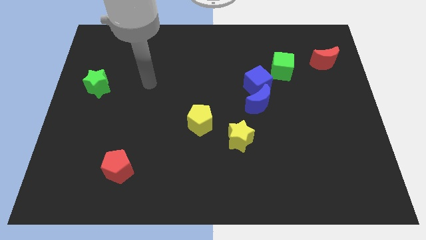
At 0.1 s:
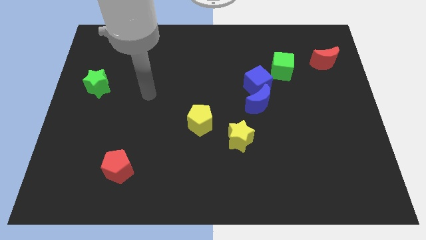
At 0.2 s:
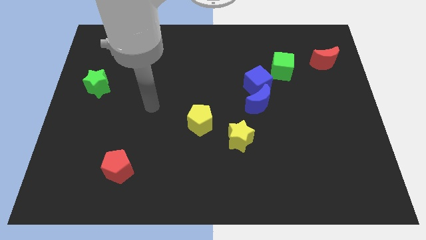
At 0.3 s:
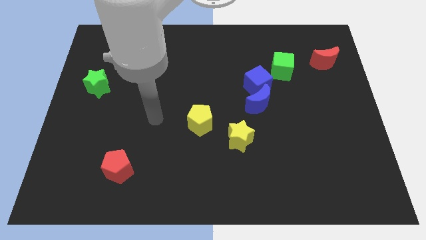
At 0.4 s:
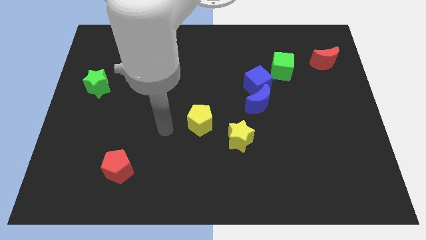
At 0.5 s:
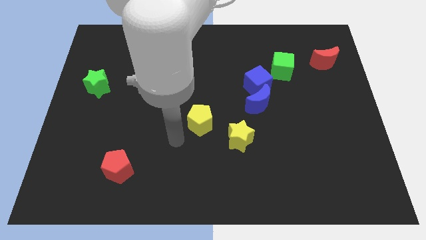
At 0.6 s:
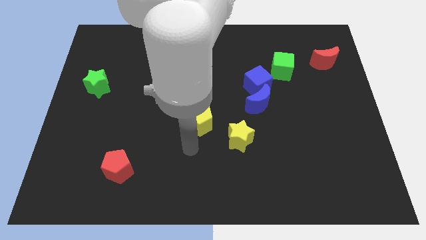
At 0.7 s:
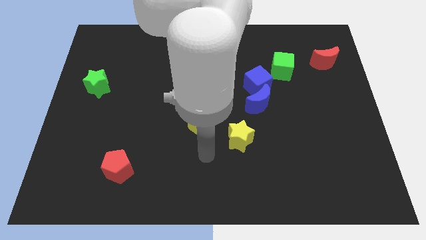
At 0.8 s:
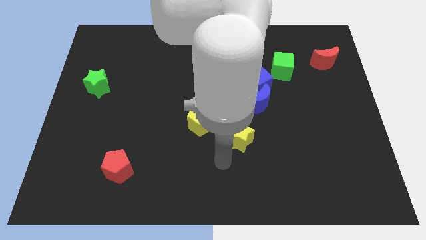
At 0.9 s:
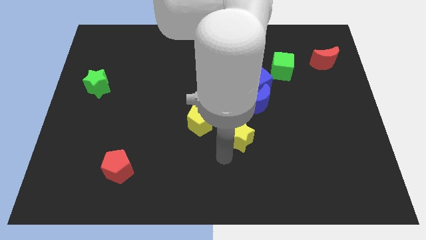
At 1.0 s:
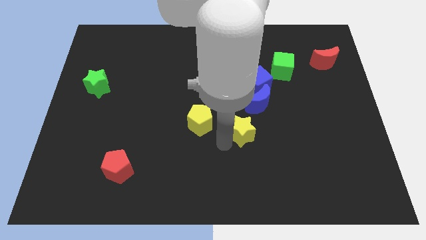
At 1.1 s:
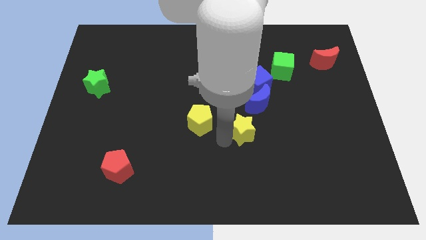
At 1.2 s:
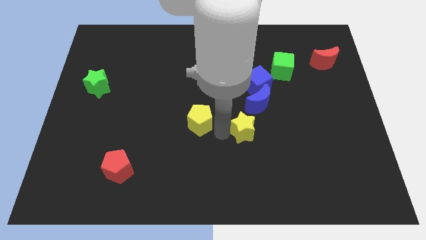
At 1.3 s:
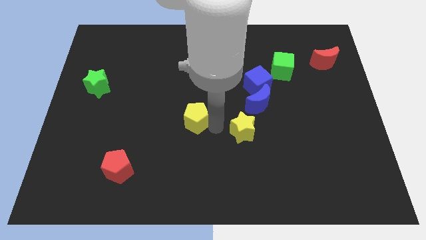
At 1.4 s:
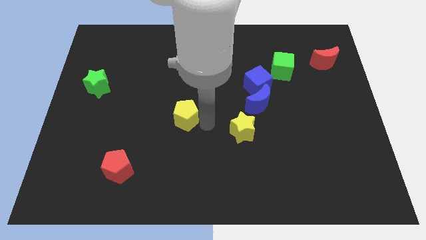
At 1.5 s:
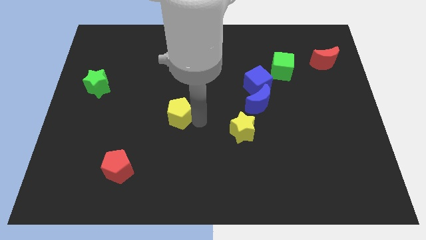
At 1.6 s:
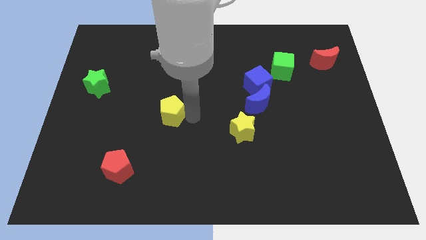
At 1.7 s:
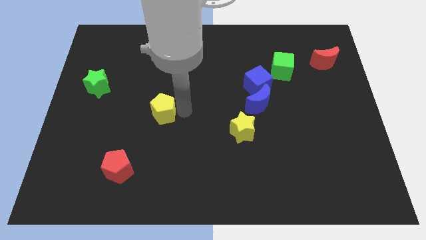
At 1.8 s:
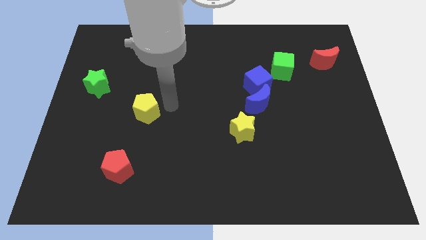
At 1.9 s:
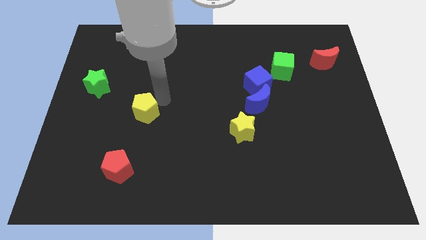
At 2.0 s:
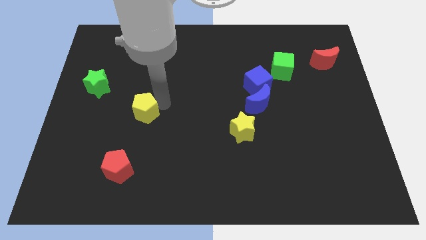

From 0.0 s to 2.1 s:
separate yellow pentagon from yellow star

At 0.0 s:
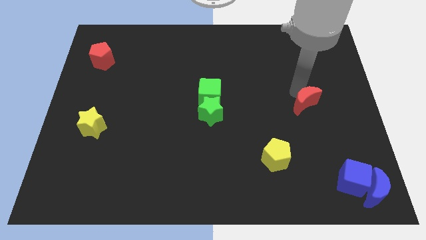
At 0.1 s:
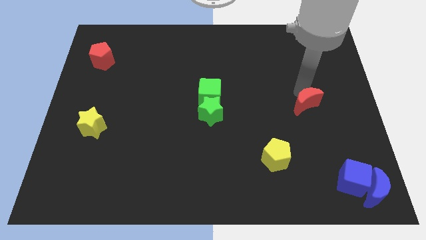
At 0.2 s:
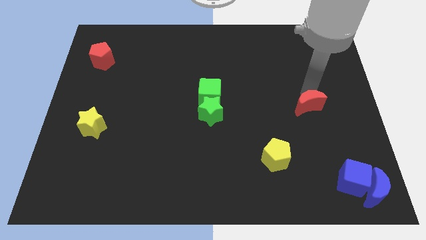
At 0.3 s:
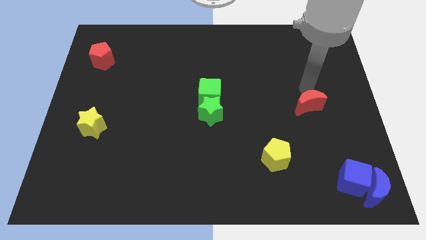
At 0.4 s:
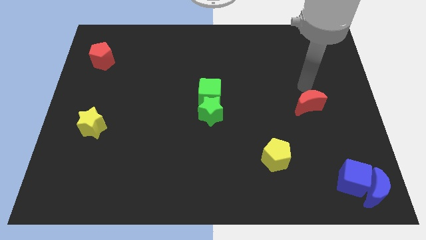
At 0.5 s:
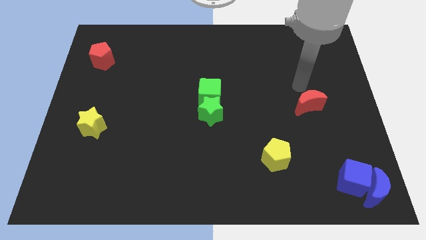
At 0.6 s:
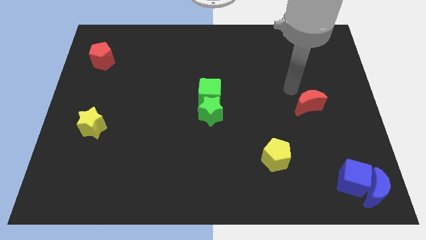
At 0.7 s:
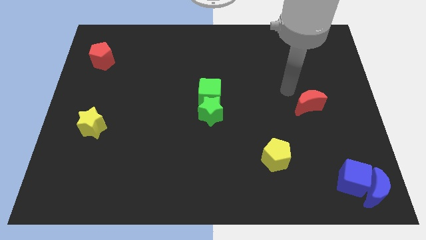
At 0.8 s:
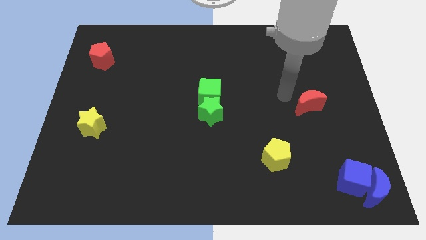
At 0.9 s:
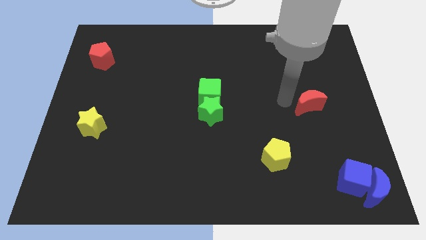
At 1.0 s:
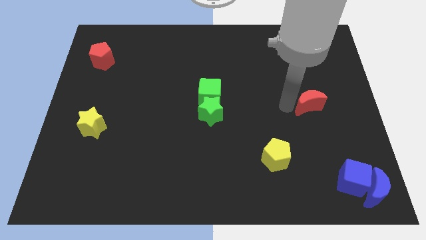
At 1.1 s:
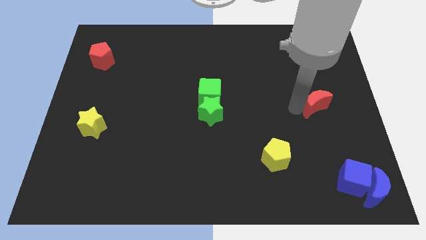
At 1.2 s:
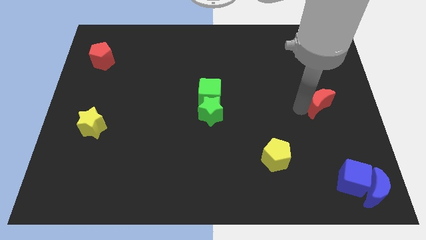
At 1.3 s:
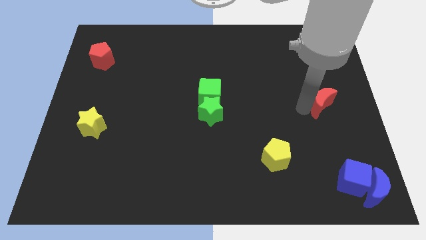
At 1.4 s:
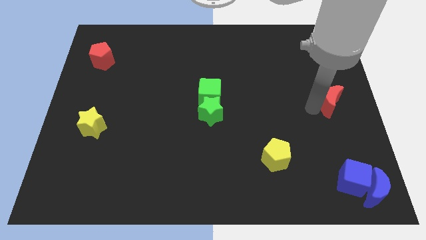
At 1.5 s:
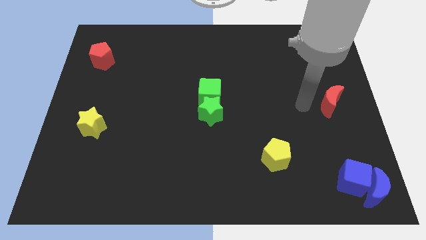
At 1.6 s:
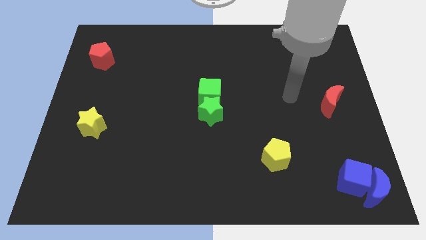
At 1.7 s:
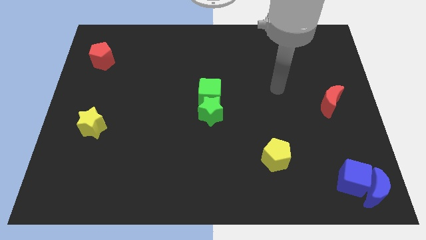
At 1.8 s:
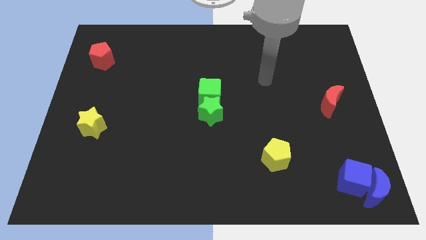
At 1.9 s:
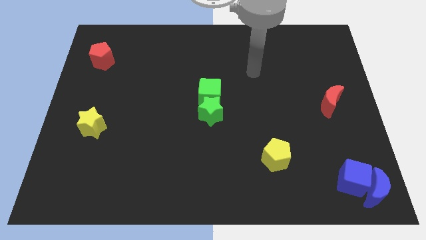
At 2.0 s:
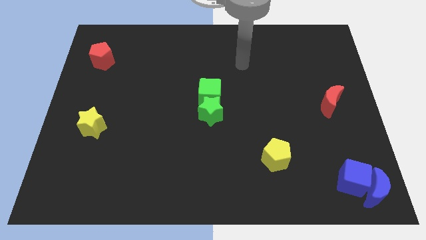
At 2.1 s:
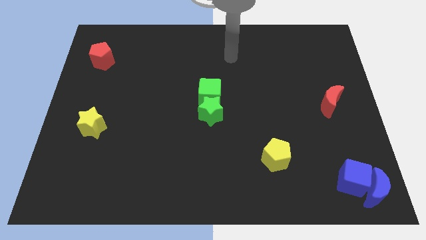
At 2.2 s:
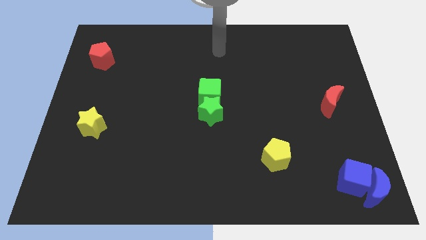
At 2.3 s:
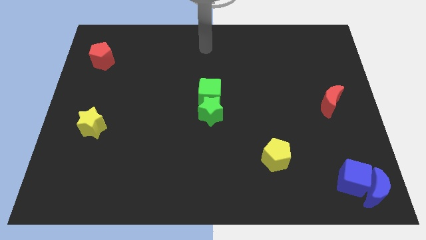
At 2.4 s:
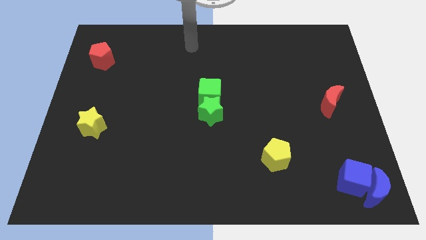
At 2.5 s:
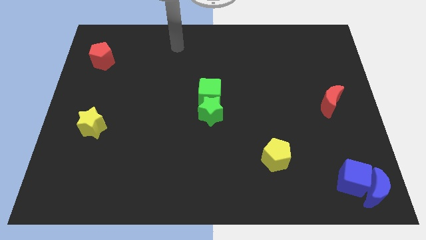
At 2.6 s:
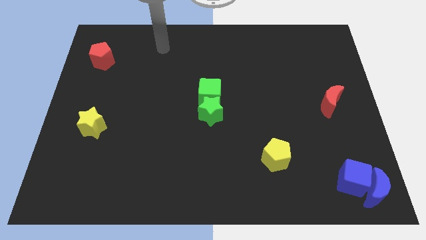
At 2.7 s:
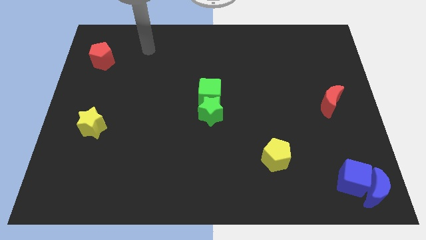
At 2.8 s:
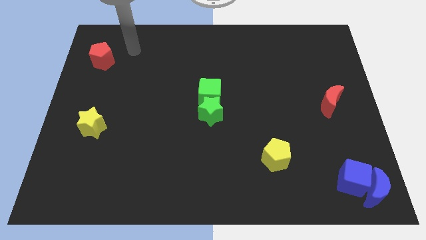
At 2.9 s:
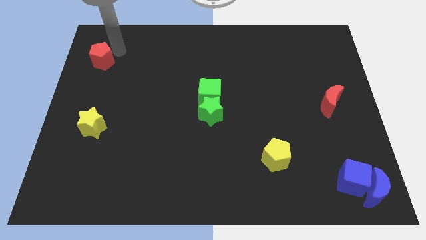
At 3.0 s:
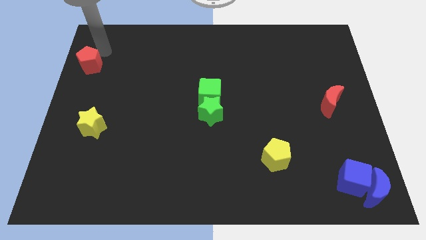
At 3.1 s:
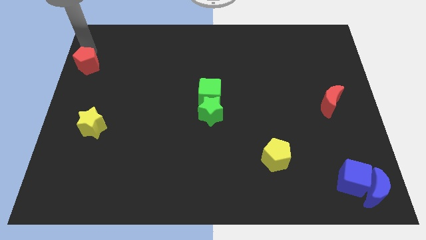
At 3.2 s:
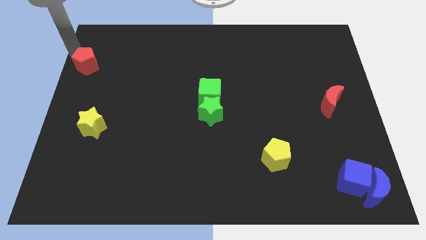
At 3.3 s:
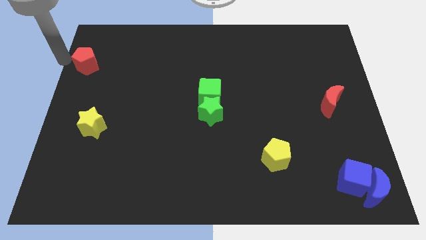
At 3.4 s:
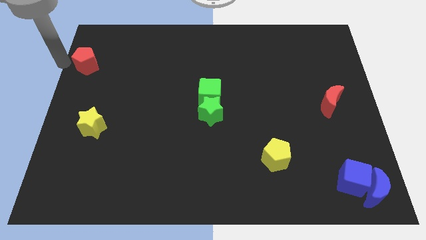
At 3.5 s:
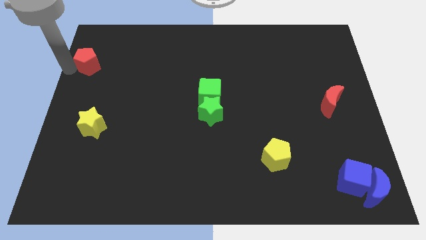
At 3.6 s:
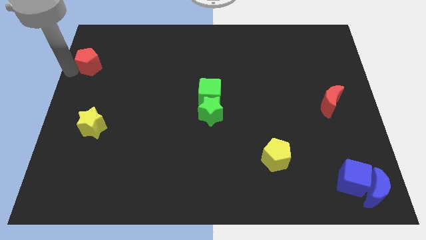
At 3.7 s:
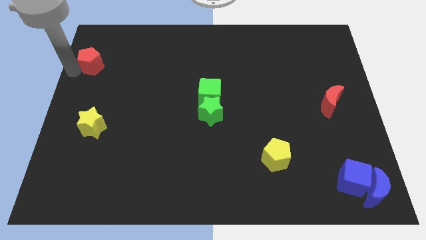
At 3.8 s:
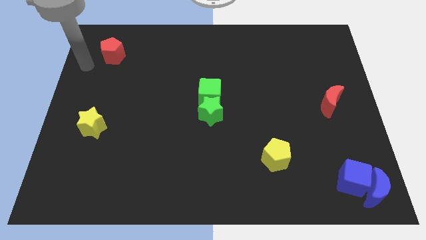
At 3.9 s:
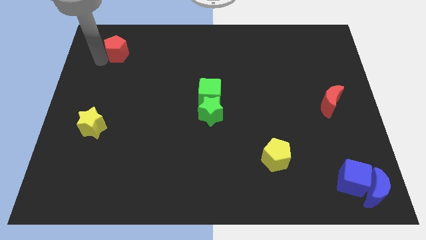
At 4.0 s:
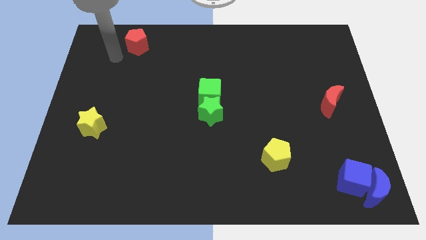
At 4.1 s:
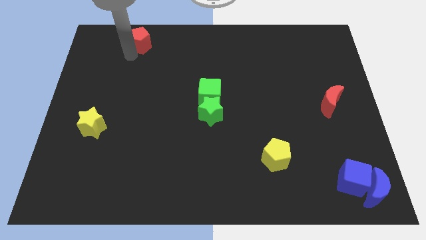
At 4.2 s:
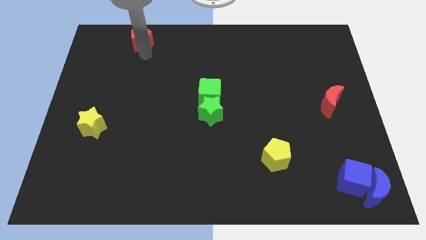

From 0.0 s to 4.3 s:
move the red crescent towards the center right of the board

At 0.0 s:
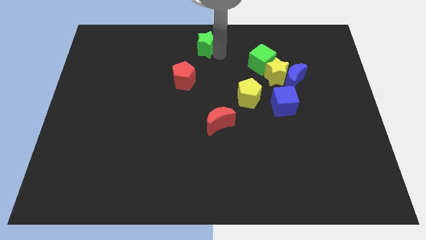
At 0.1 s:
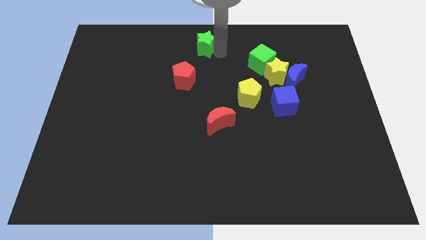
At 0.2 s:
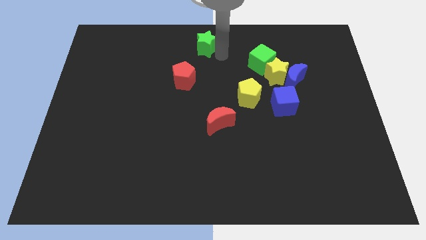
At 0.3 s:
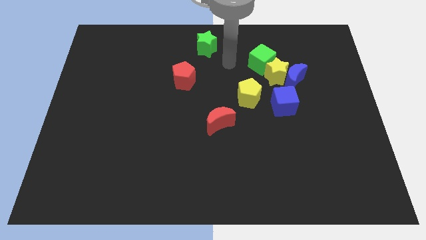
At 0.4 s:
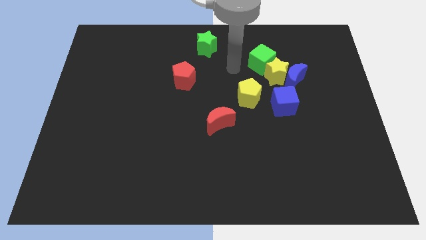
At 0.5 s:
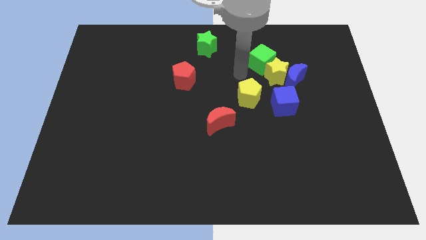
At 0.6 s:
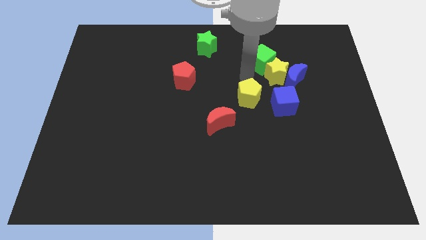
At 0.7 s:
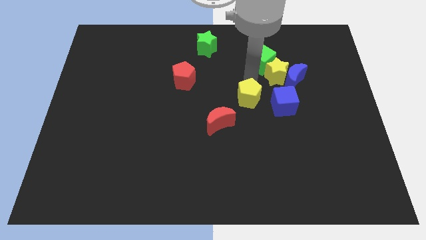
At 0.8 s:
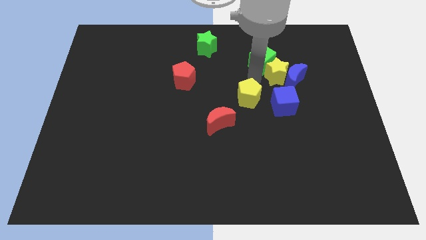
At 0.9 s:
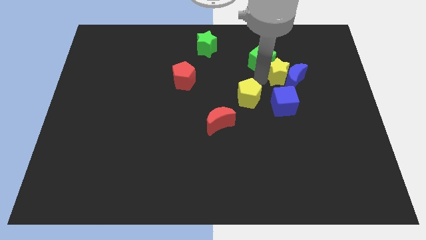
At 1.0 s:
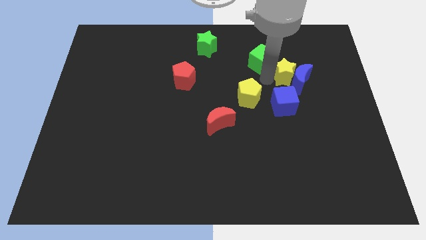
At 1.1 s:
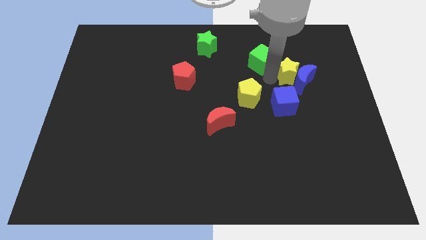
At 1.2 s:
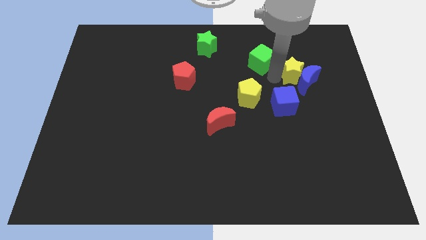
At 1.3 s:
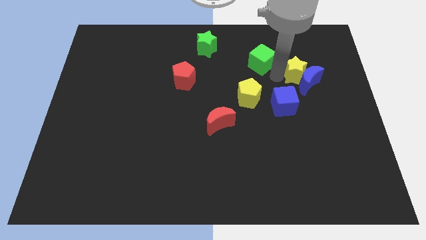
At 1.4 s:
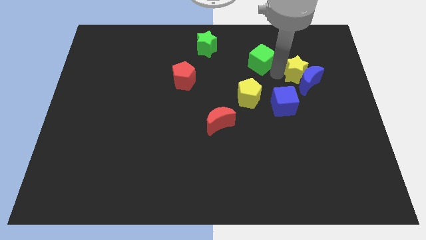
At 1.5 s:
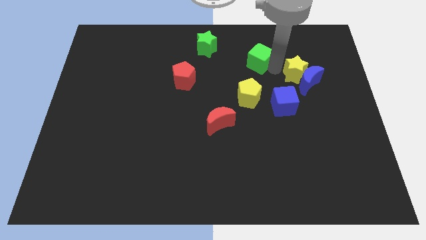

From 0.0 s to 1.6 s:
separate the green cube and yellow star from each other

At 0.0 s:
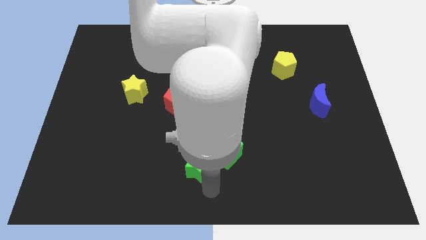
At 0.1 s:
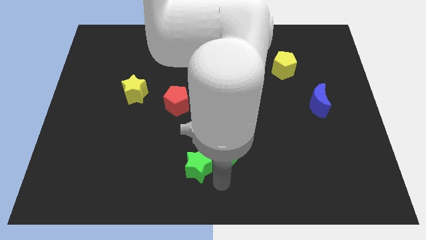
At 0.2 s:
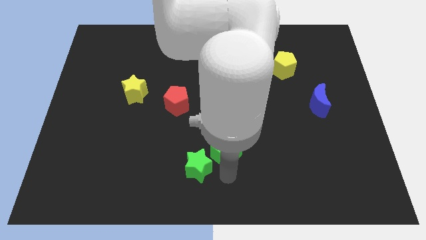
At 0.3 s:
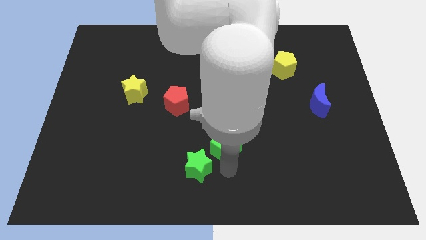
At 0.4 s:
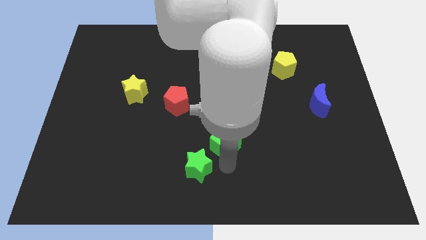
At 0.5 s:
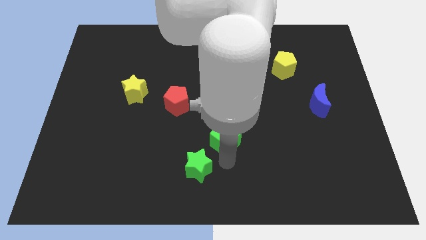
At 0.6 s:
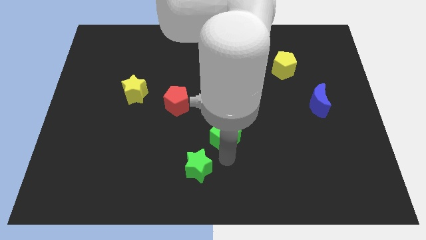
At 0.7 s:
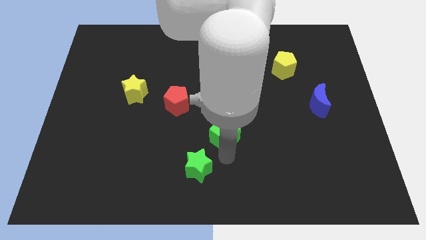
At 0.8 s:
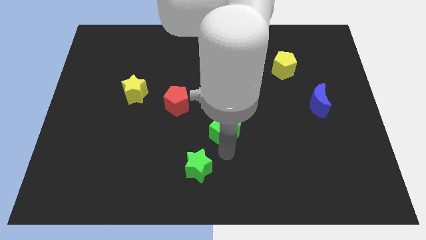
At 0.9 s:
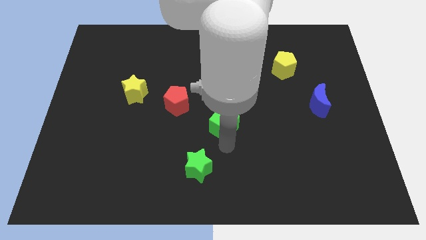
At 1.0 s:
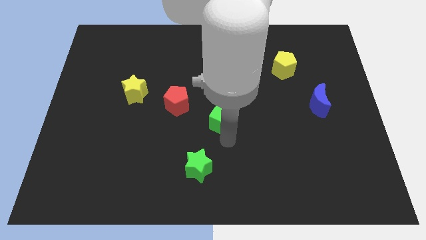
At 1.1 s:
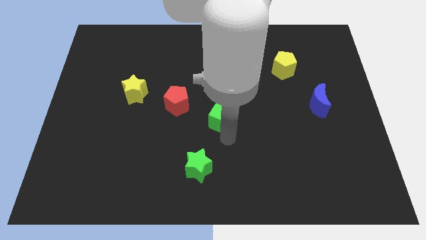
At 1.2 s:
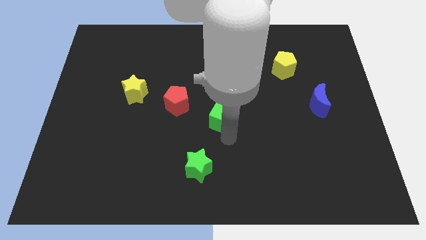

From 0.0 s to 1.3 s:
push the green cube diagonally to the green star
